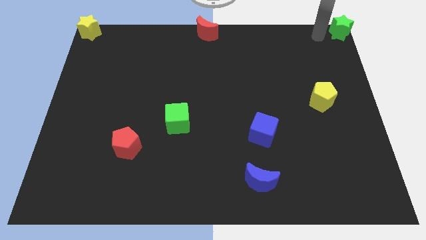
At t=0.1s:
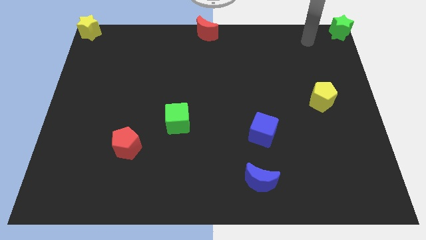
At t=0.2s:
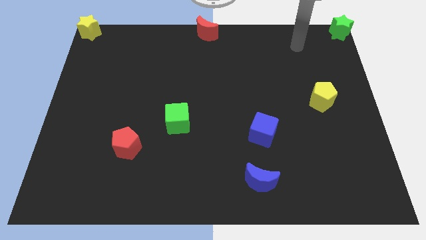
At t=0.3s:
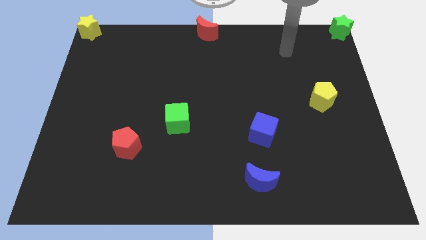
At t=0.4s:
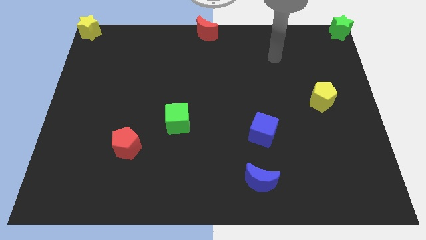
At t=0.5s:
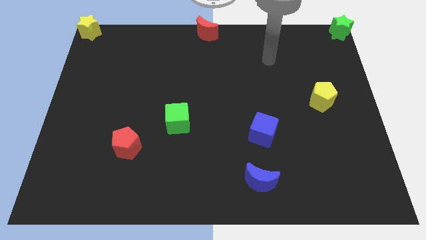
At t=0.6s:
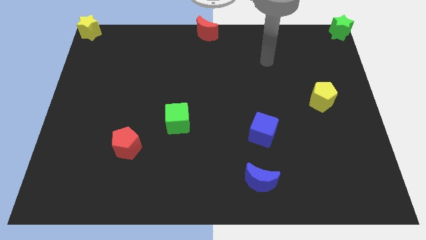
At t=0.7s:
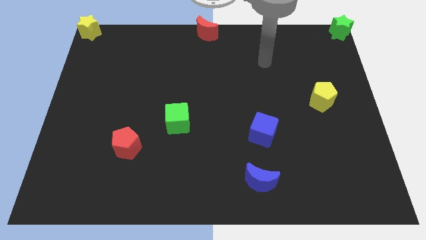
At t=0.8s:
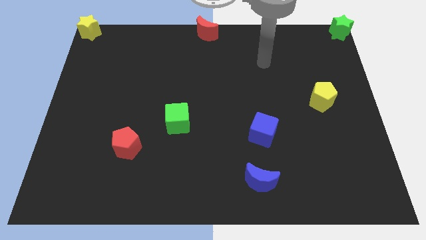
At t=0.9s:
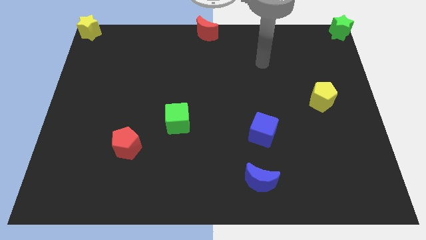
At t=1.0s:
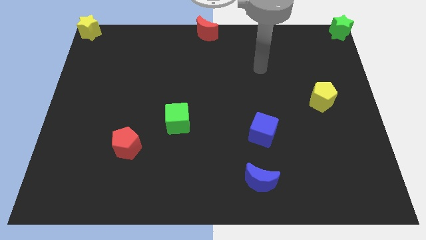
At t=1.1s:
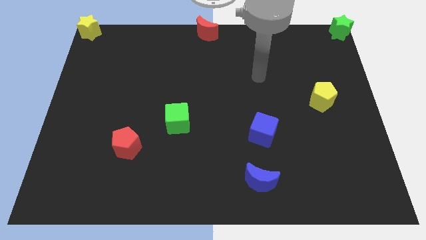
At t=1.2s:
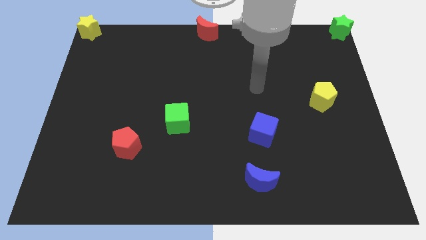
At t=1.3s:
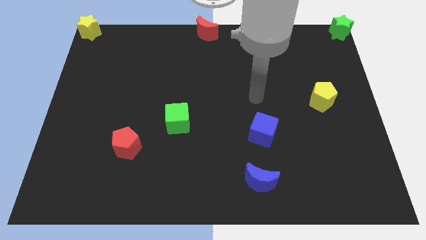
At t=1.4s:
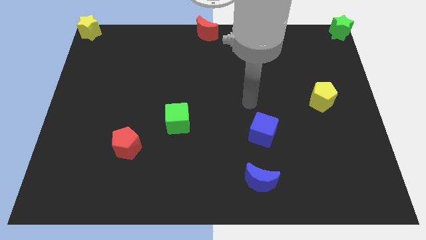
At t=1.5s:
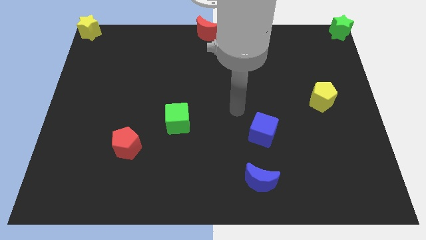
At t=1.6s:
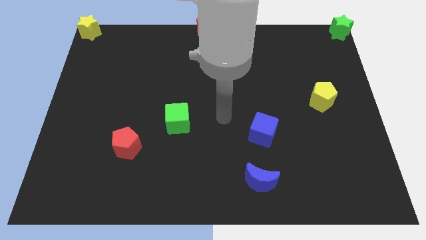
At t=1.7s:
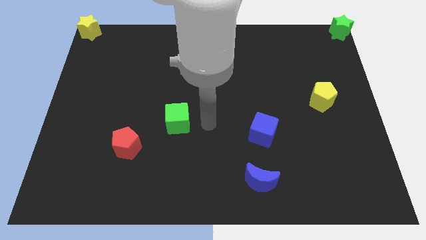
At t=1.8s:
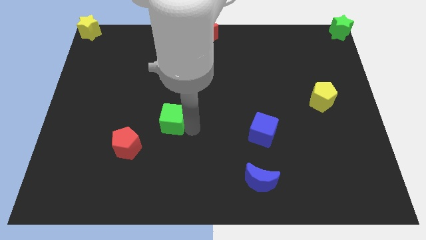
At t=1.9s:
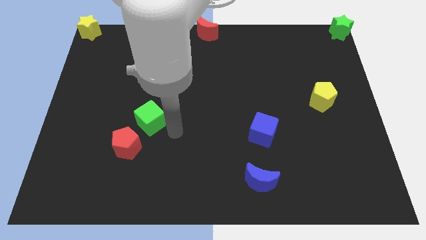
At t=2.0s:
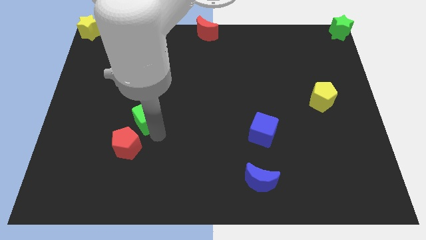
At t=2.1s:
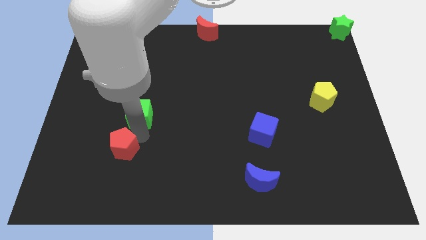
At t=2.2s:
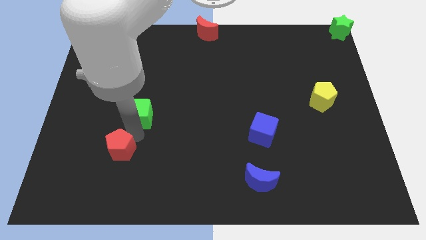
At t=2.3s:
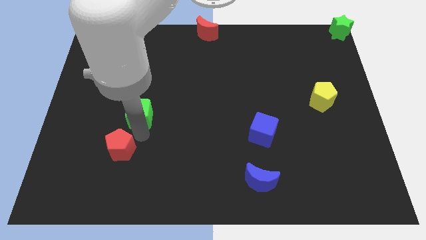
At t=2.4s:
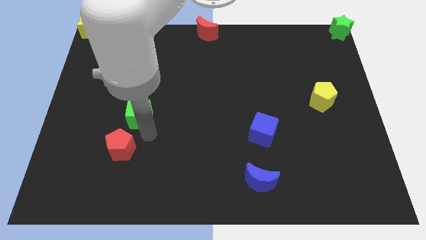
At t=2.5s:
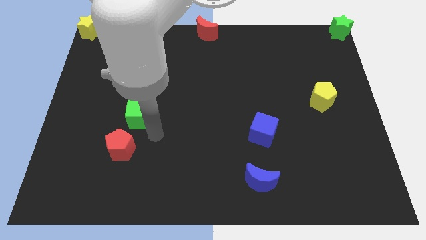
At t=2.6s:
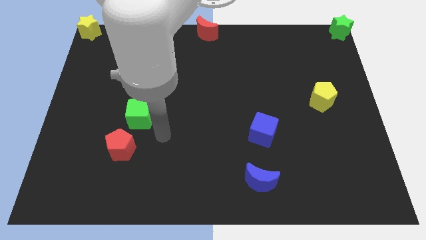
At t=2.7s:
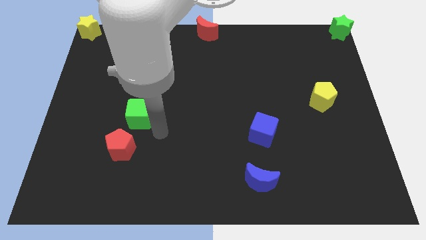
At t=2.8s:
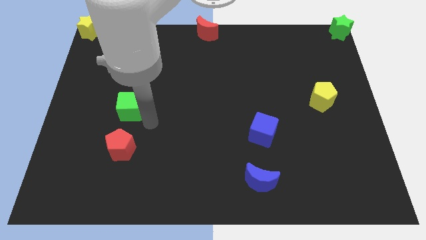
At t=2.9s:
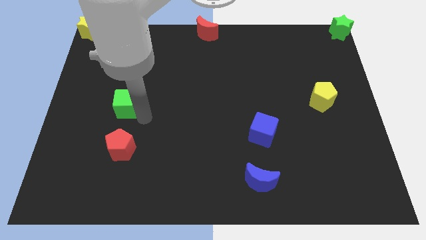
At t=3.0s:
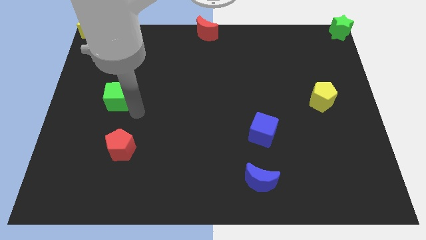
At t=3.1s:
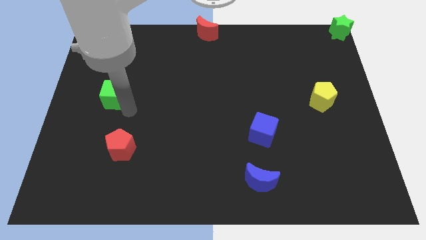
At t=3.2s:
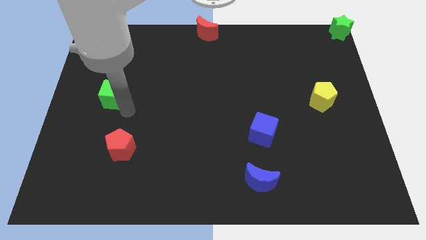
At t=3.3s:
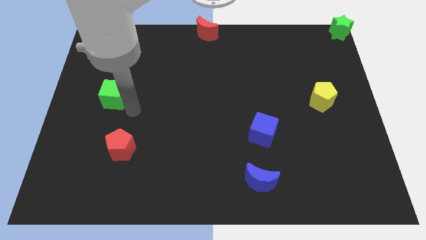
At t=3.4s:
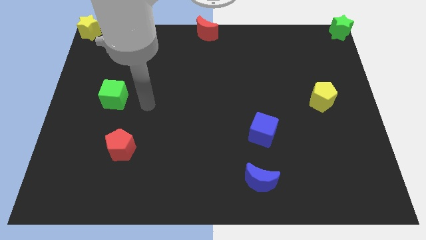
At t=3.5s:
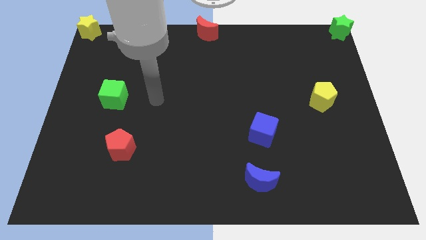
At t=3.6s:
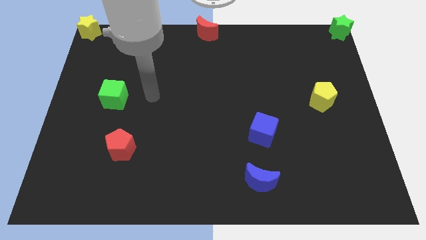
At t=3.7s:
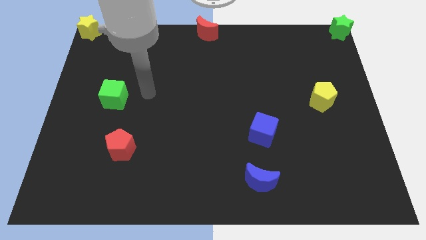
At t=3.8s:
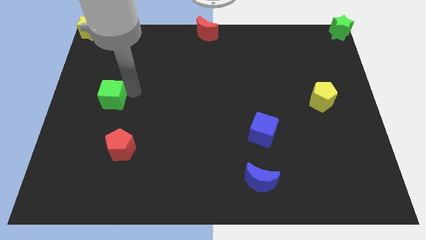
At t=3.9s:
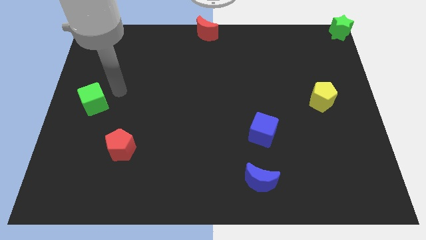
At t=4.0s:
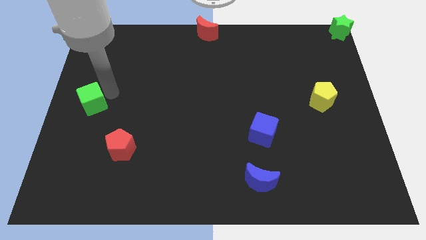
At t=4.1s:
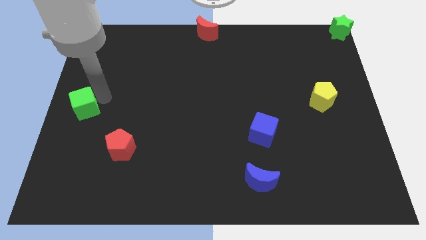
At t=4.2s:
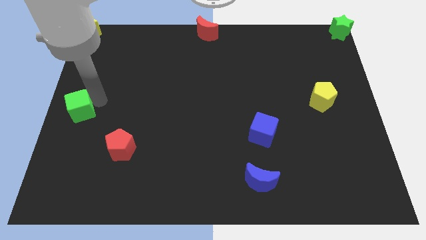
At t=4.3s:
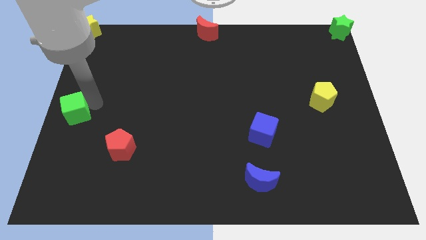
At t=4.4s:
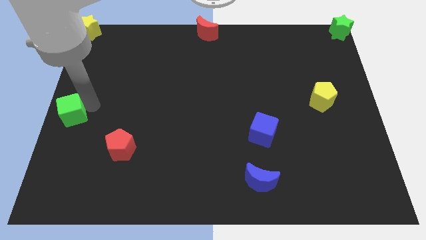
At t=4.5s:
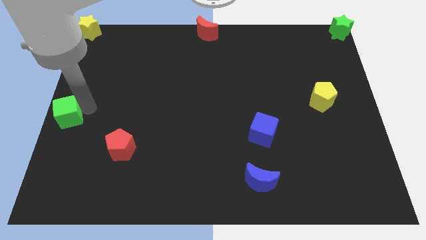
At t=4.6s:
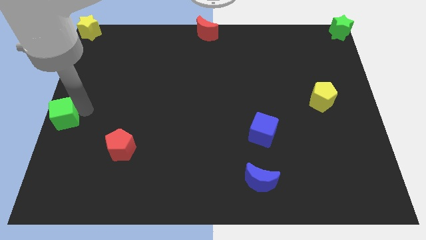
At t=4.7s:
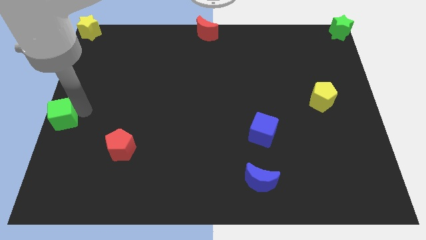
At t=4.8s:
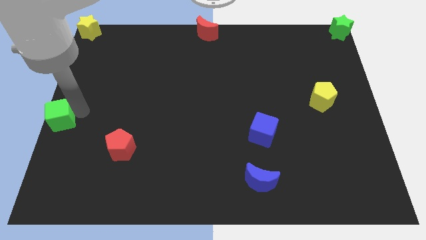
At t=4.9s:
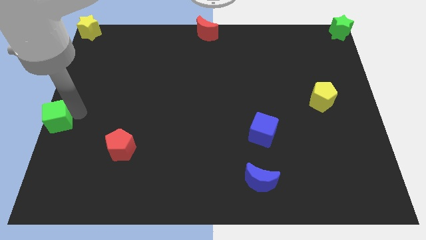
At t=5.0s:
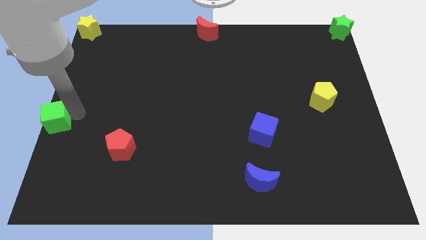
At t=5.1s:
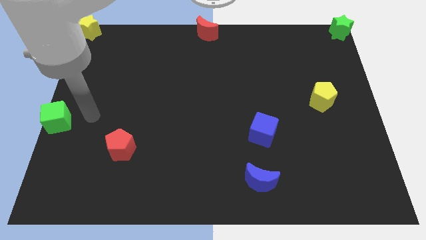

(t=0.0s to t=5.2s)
drag the green cube to the left side of the board

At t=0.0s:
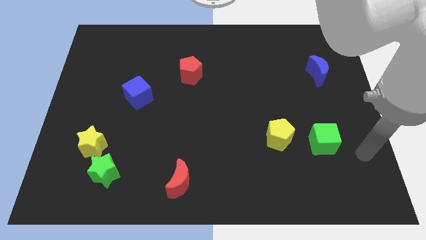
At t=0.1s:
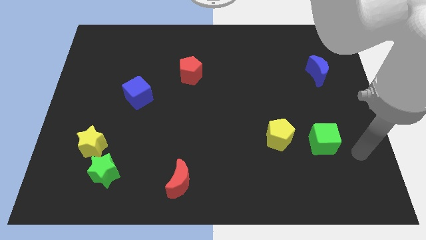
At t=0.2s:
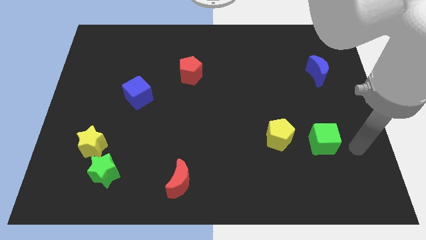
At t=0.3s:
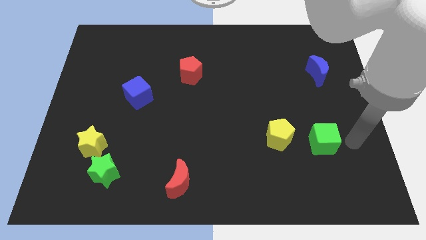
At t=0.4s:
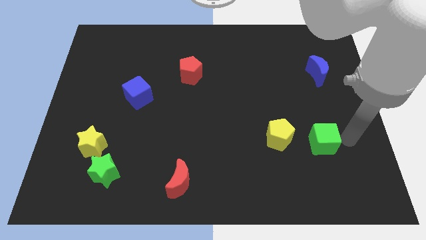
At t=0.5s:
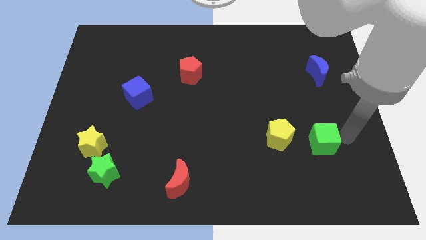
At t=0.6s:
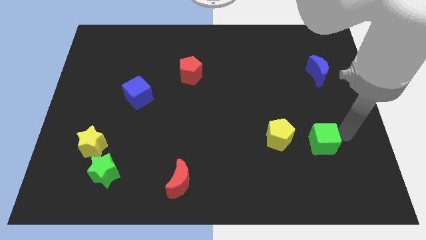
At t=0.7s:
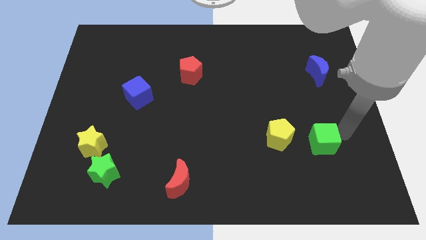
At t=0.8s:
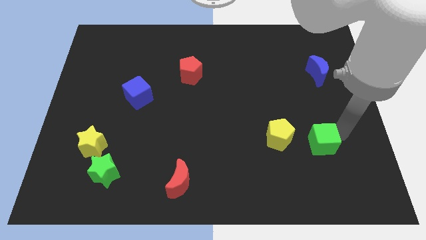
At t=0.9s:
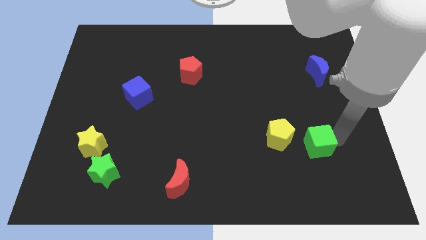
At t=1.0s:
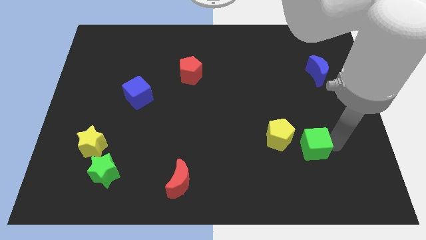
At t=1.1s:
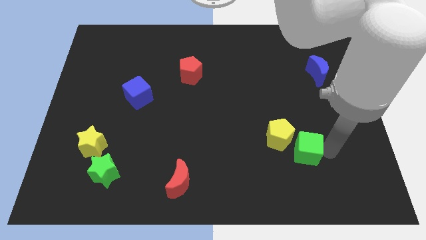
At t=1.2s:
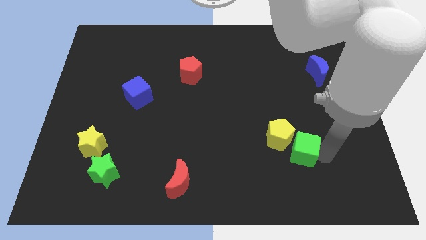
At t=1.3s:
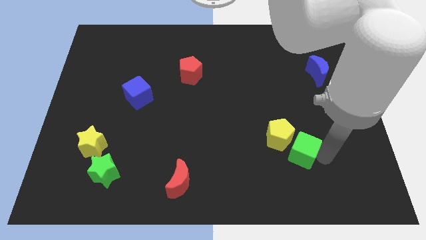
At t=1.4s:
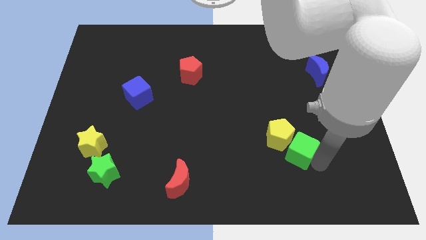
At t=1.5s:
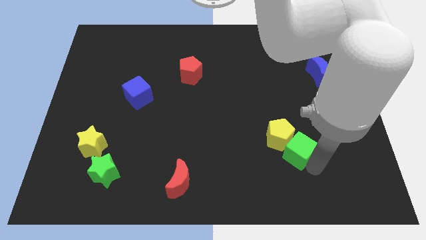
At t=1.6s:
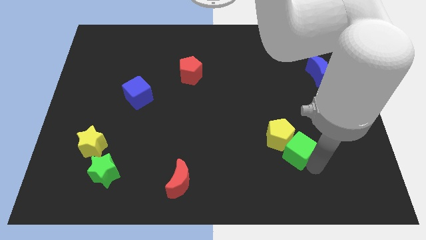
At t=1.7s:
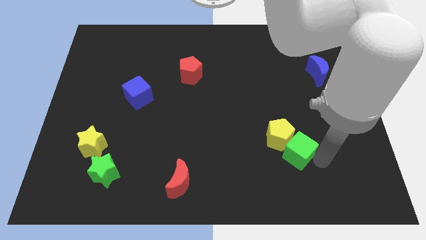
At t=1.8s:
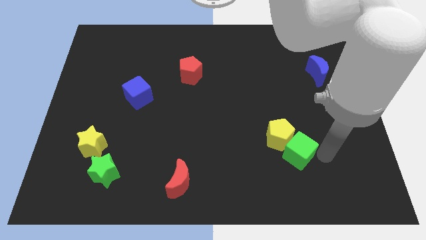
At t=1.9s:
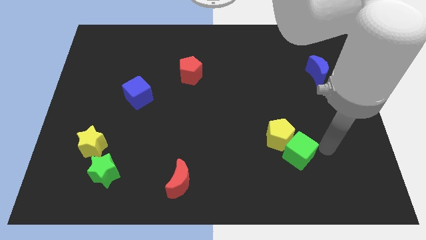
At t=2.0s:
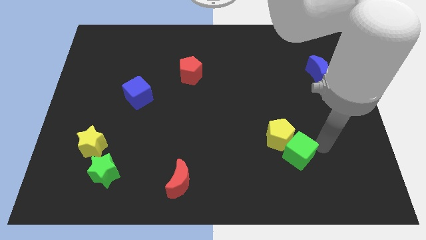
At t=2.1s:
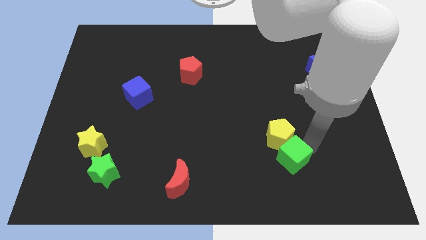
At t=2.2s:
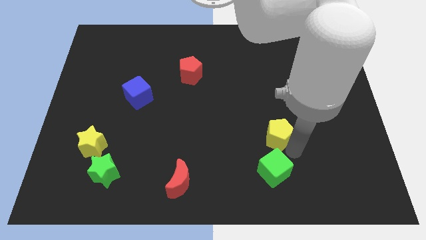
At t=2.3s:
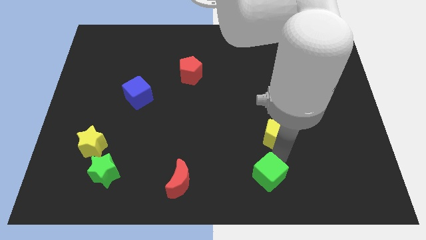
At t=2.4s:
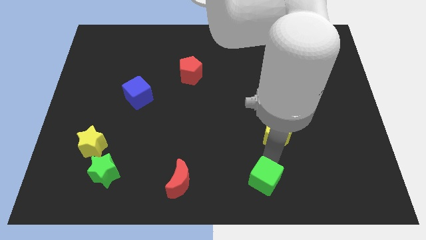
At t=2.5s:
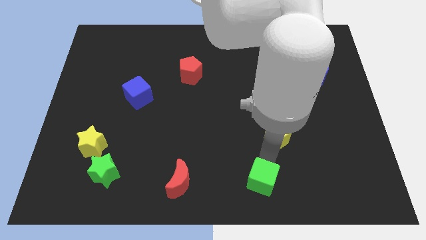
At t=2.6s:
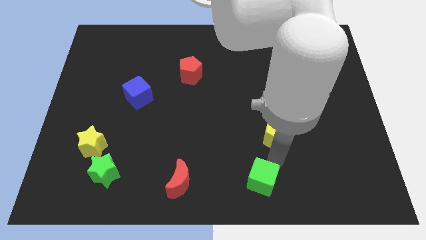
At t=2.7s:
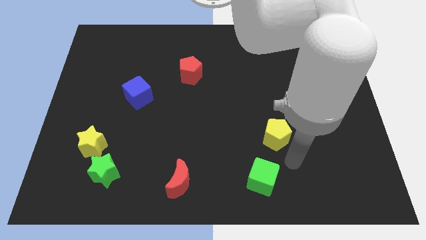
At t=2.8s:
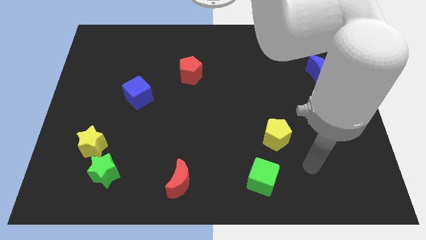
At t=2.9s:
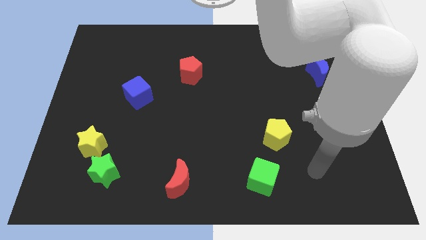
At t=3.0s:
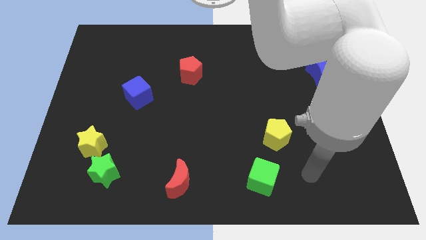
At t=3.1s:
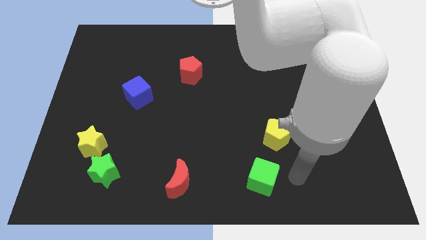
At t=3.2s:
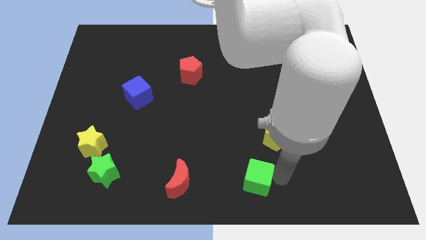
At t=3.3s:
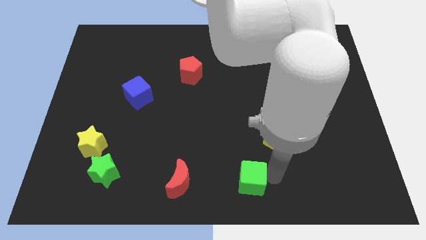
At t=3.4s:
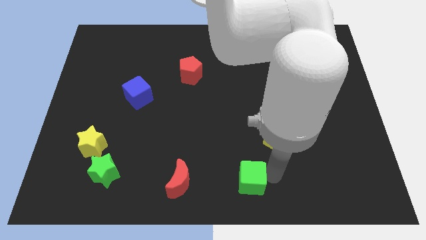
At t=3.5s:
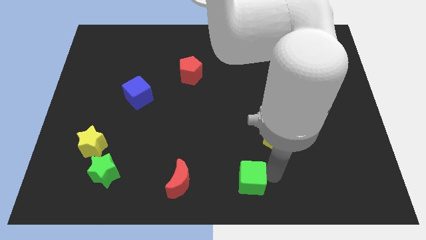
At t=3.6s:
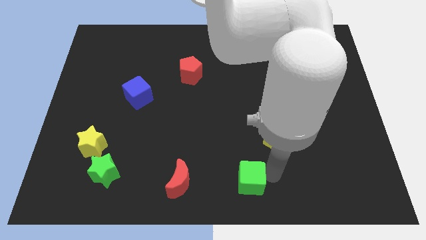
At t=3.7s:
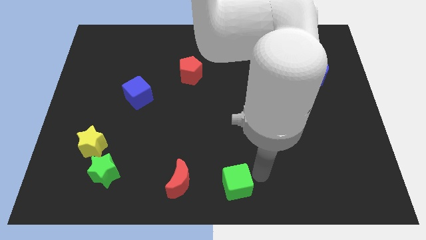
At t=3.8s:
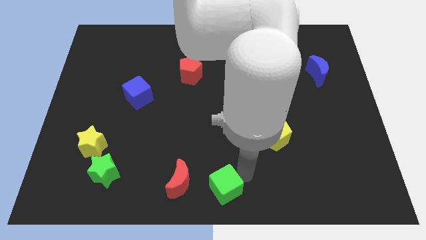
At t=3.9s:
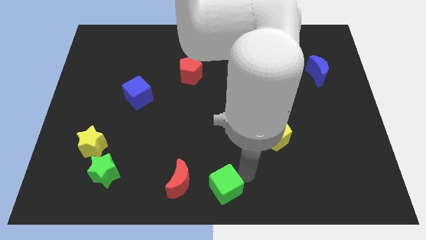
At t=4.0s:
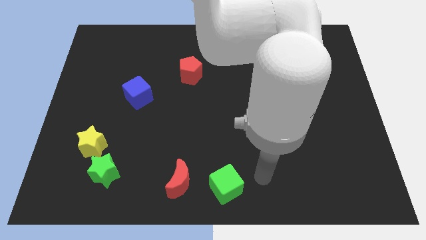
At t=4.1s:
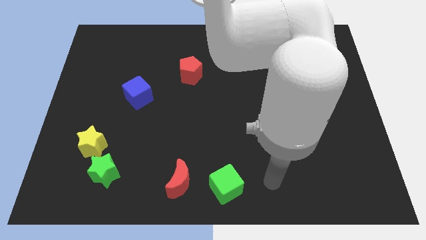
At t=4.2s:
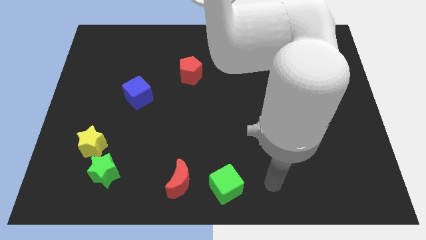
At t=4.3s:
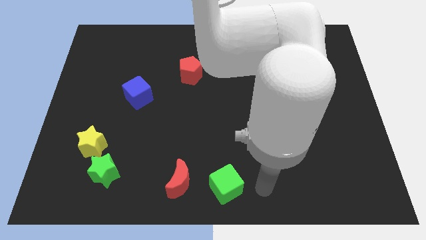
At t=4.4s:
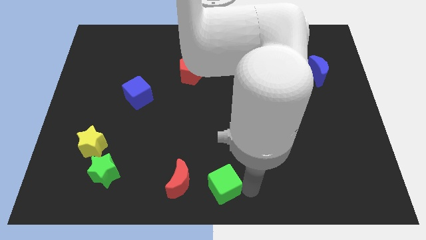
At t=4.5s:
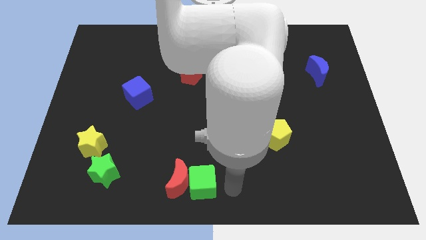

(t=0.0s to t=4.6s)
push the green cube into the red moon
